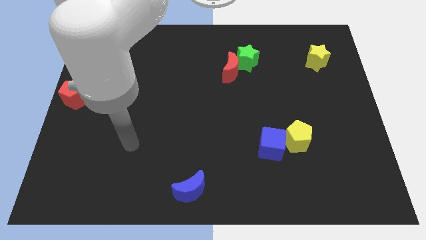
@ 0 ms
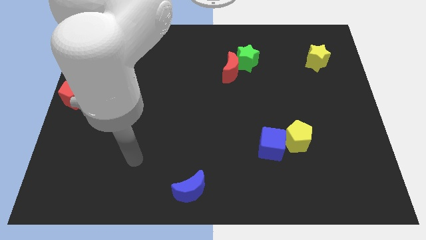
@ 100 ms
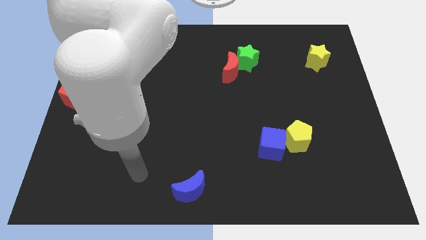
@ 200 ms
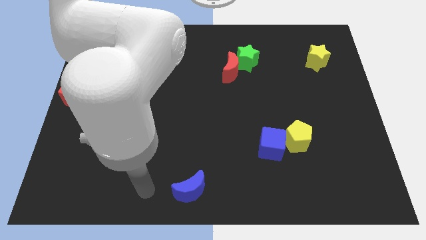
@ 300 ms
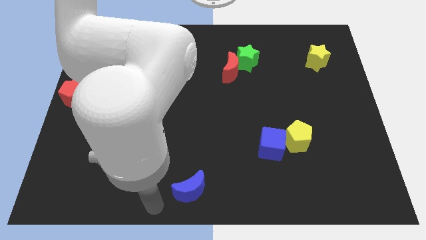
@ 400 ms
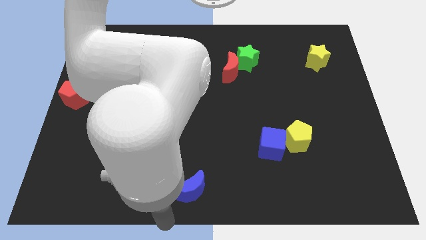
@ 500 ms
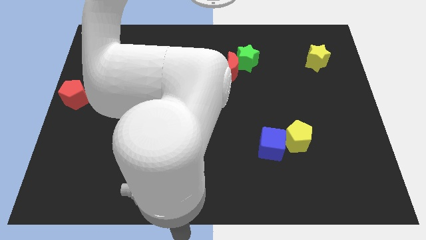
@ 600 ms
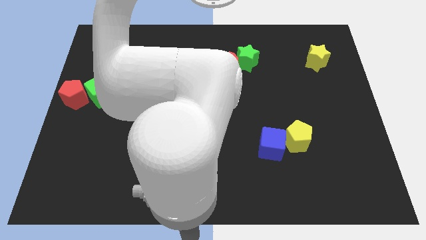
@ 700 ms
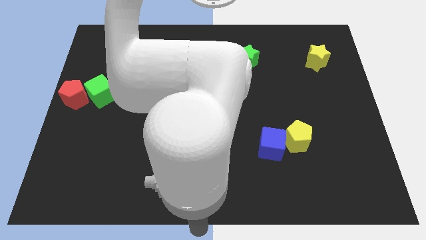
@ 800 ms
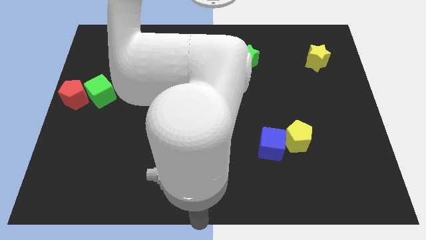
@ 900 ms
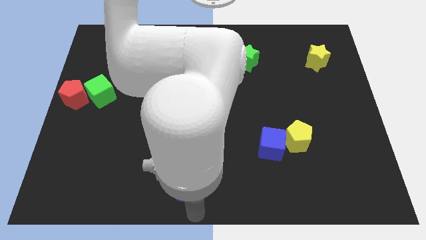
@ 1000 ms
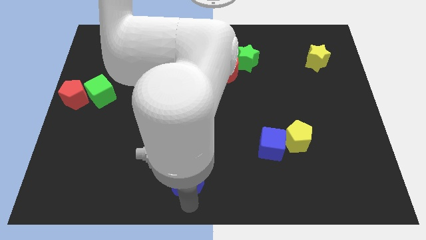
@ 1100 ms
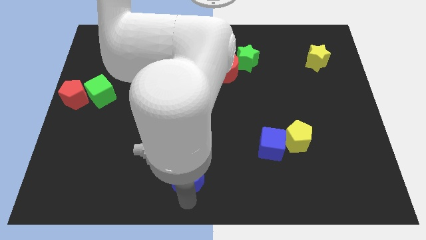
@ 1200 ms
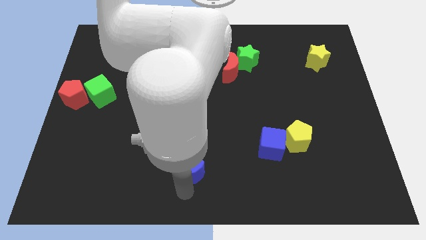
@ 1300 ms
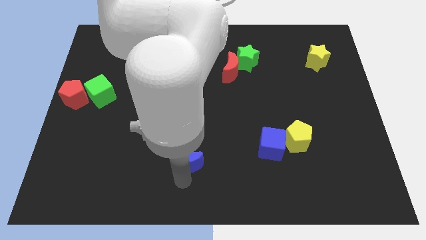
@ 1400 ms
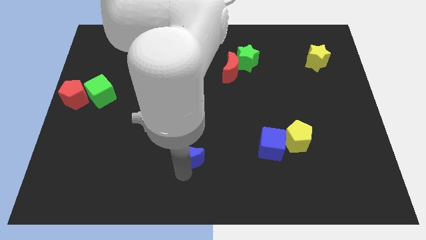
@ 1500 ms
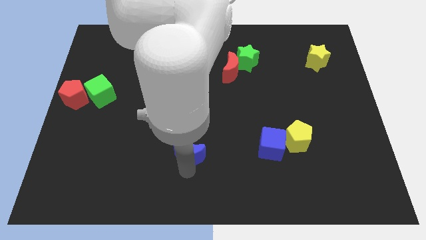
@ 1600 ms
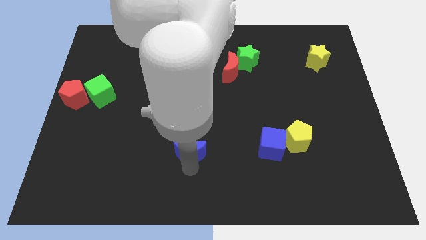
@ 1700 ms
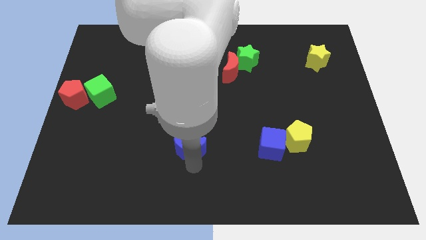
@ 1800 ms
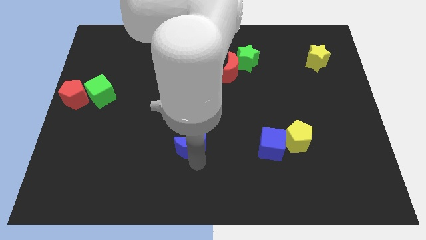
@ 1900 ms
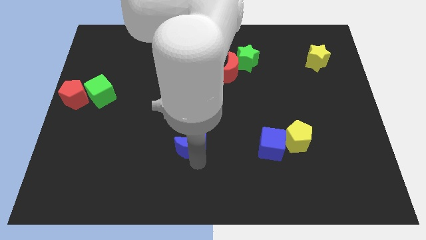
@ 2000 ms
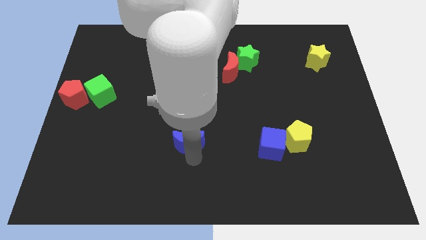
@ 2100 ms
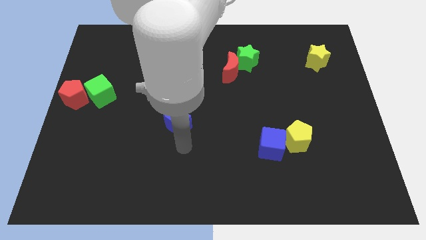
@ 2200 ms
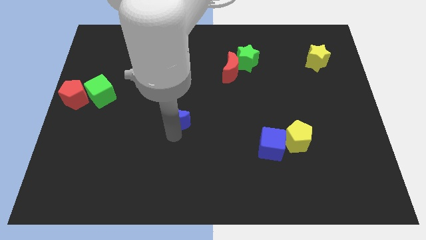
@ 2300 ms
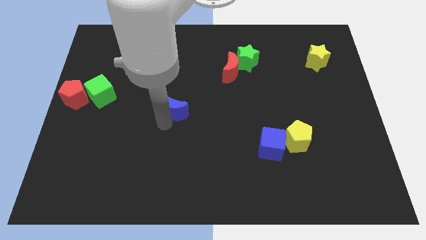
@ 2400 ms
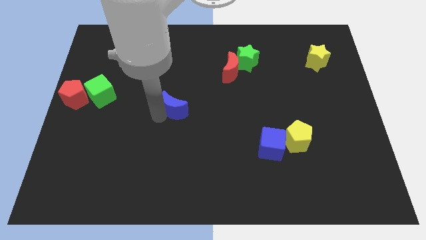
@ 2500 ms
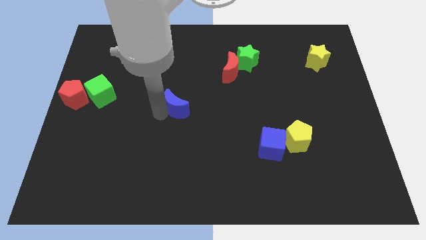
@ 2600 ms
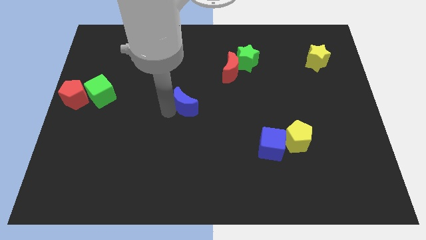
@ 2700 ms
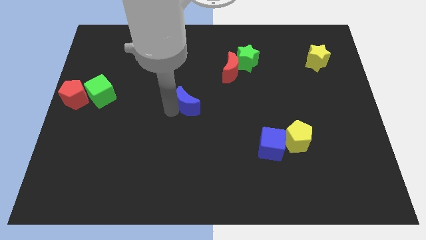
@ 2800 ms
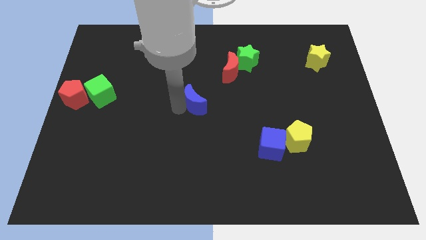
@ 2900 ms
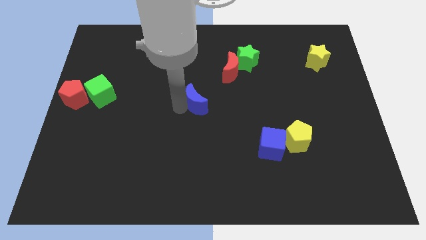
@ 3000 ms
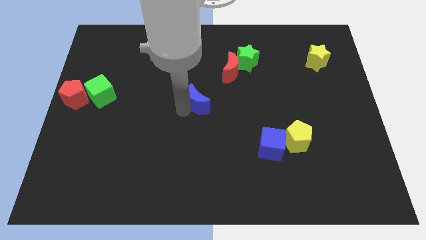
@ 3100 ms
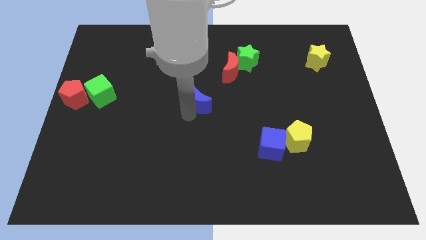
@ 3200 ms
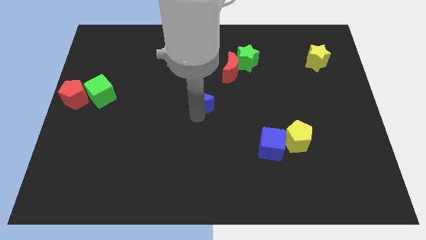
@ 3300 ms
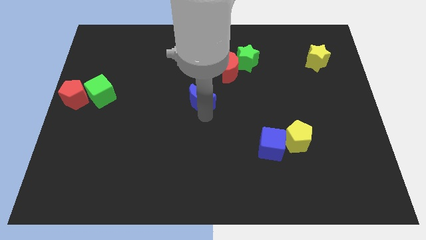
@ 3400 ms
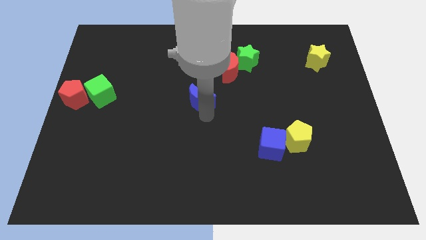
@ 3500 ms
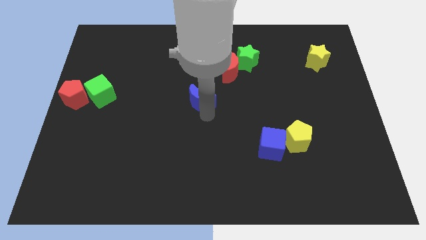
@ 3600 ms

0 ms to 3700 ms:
place the blue crescent horizontally to the right side of the green cube

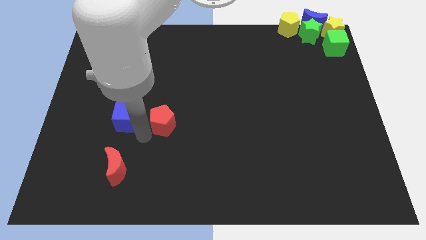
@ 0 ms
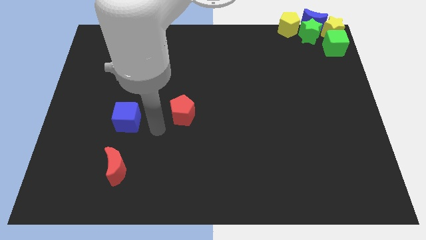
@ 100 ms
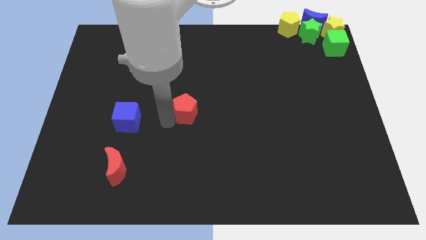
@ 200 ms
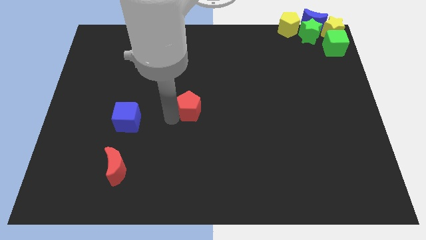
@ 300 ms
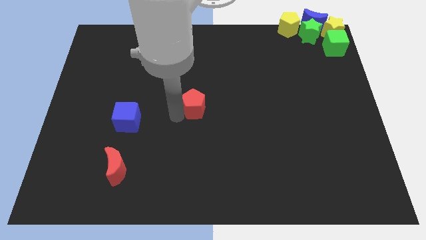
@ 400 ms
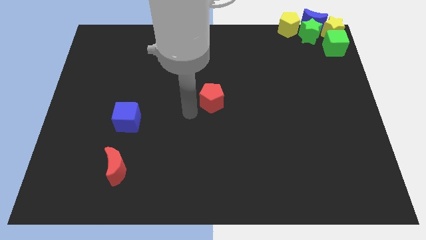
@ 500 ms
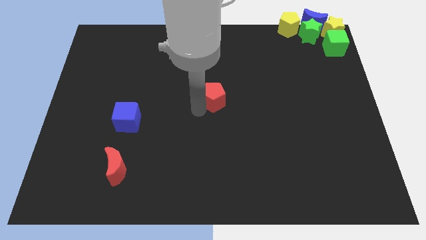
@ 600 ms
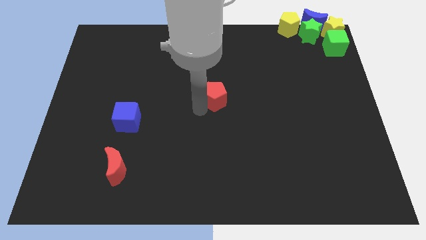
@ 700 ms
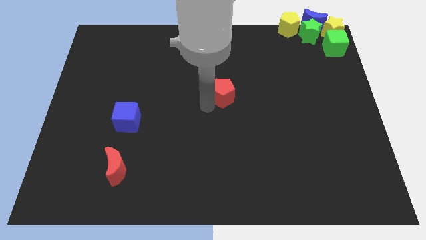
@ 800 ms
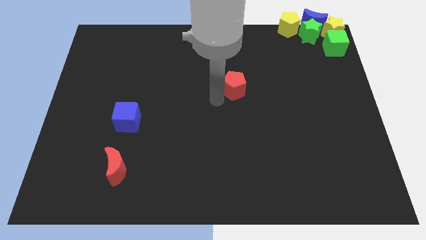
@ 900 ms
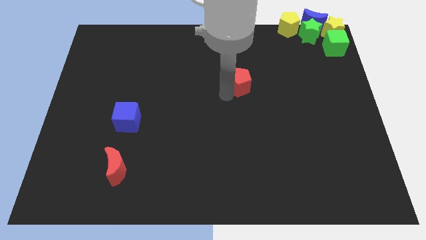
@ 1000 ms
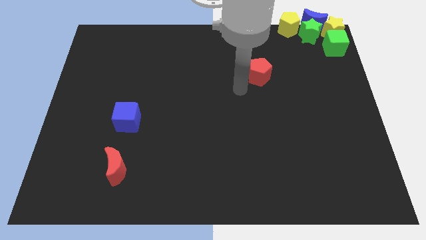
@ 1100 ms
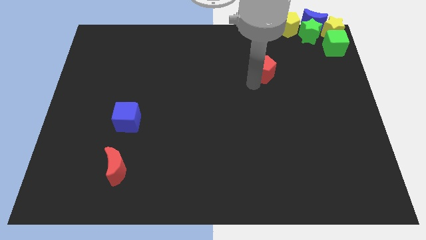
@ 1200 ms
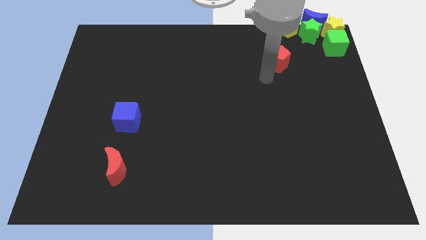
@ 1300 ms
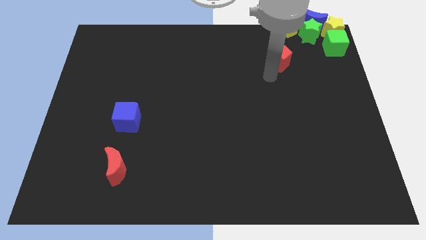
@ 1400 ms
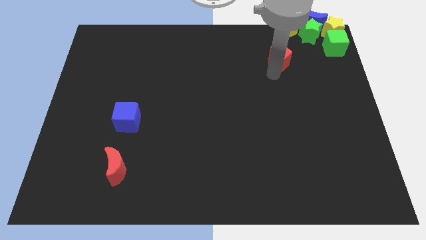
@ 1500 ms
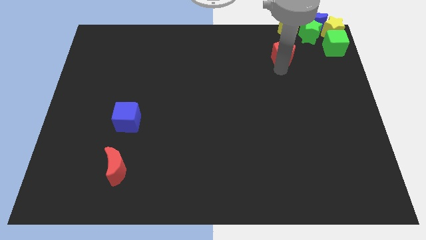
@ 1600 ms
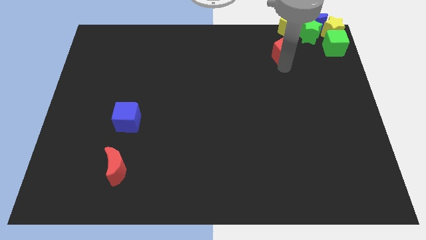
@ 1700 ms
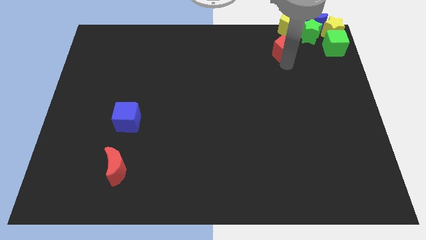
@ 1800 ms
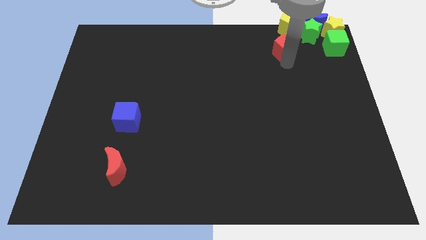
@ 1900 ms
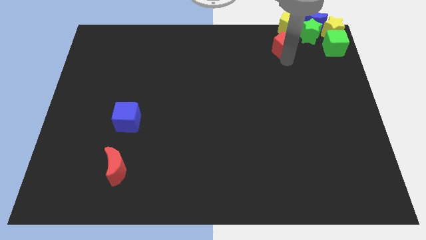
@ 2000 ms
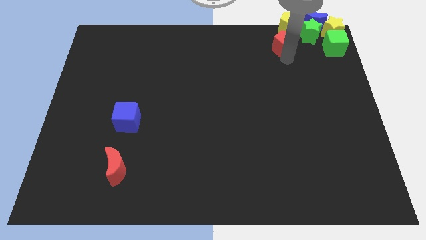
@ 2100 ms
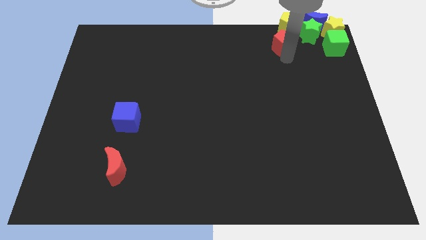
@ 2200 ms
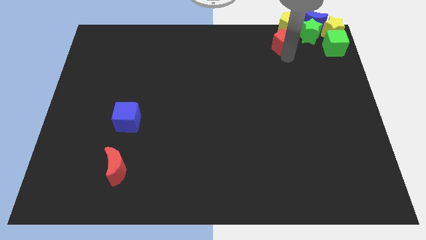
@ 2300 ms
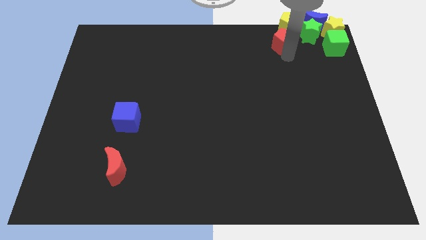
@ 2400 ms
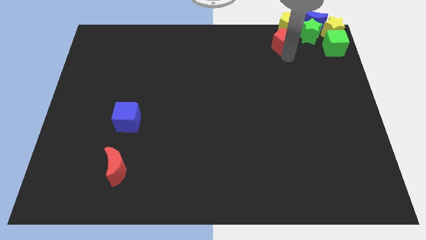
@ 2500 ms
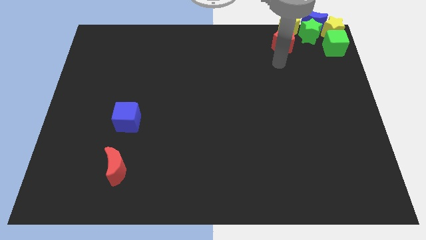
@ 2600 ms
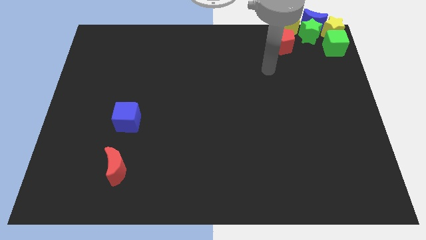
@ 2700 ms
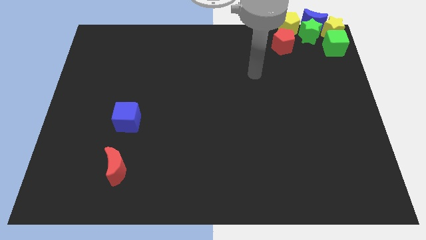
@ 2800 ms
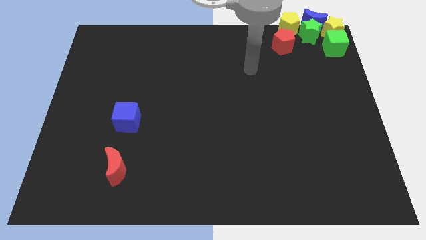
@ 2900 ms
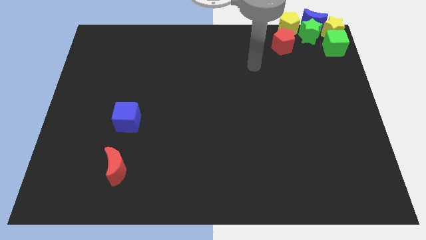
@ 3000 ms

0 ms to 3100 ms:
move red pentagon below the yellow pentagon

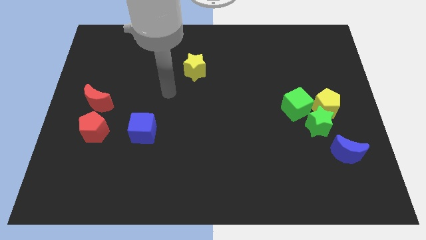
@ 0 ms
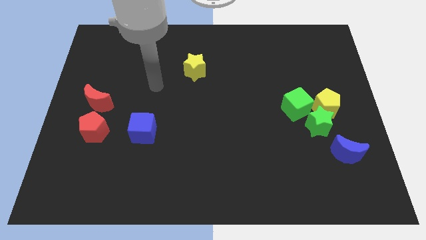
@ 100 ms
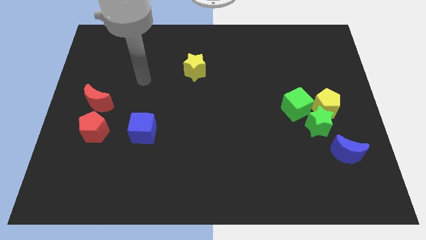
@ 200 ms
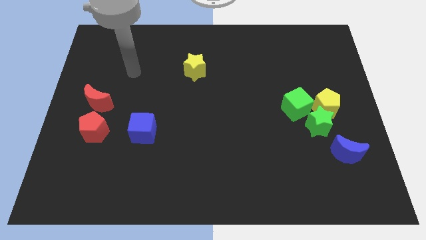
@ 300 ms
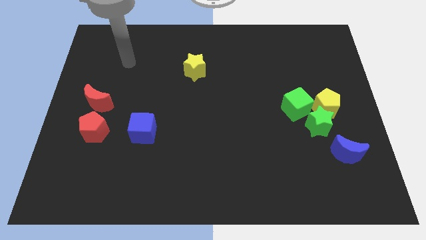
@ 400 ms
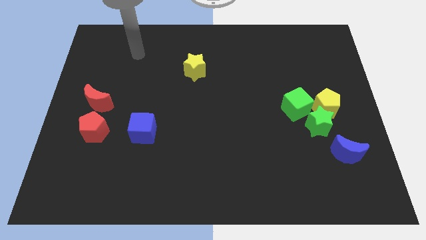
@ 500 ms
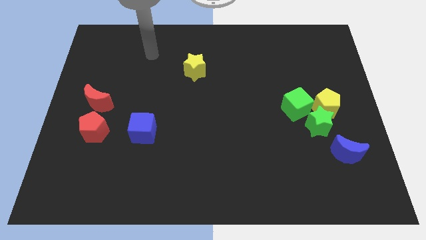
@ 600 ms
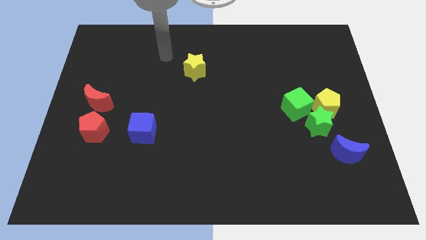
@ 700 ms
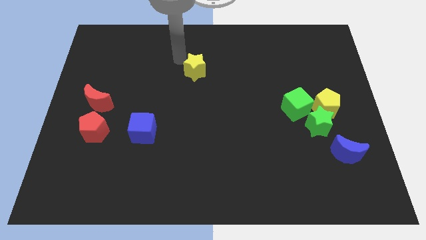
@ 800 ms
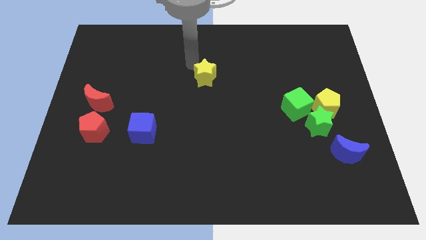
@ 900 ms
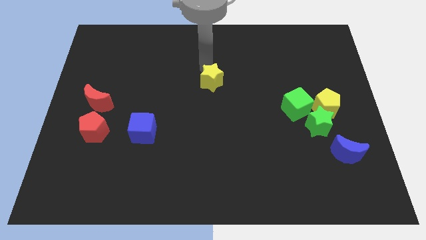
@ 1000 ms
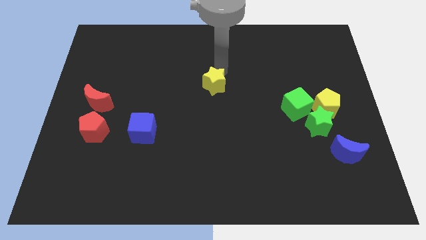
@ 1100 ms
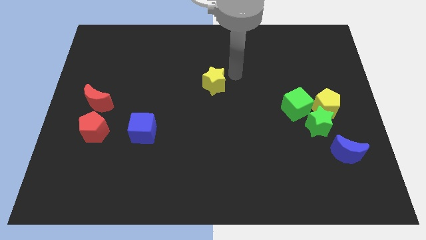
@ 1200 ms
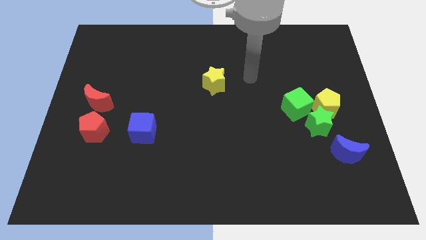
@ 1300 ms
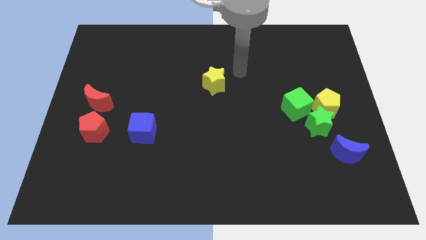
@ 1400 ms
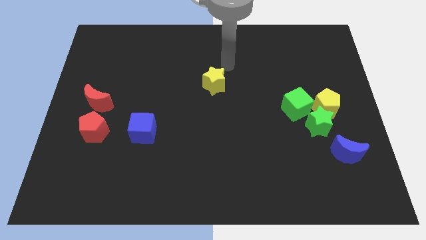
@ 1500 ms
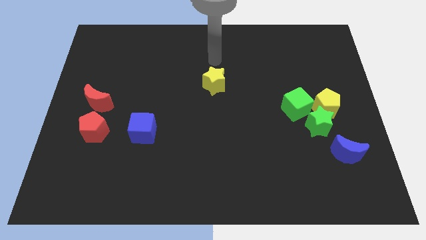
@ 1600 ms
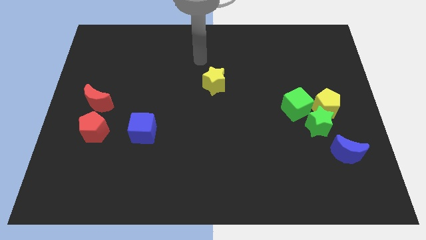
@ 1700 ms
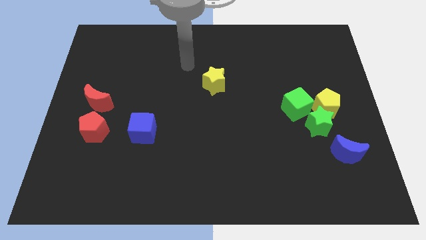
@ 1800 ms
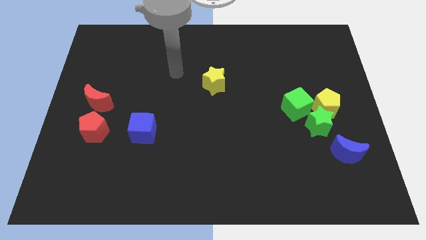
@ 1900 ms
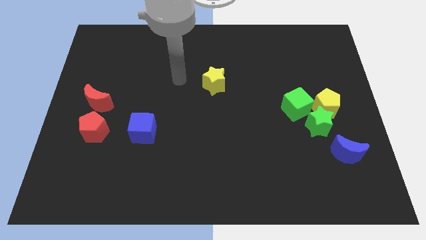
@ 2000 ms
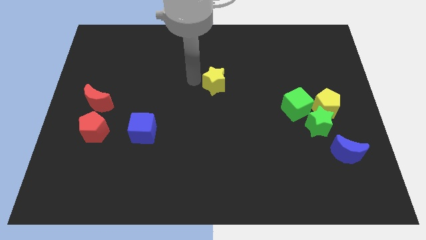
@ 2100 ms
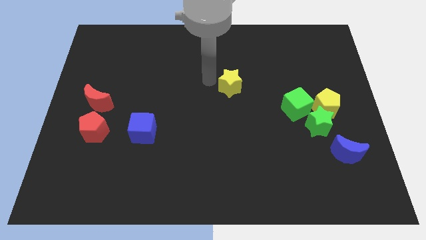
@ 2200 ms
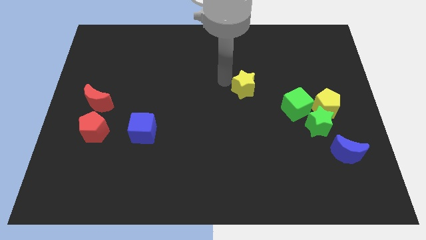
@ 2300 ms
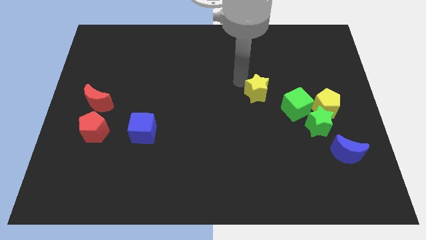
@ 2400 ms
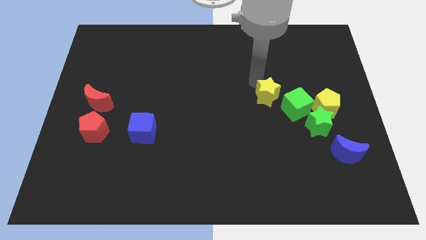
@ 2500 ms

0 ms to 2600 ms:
move yellow star diagonally above the green cube
